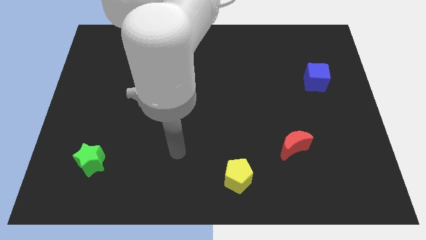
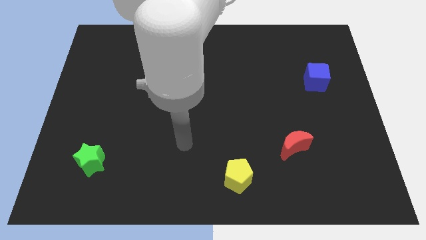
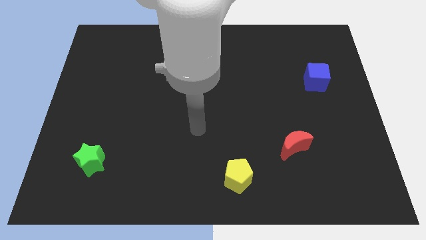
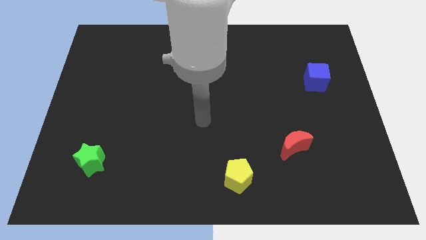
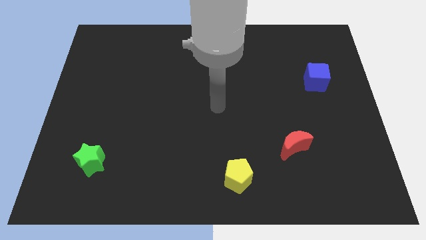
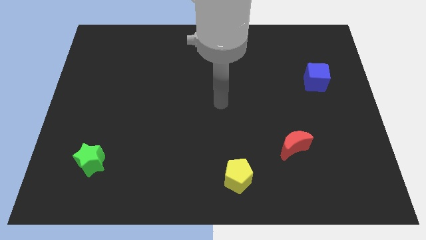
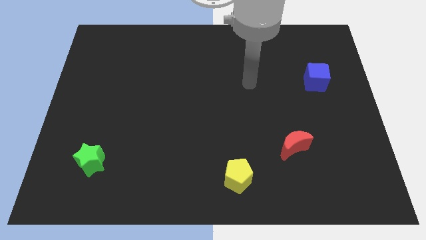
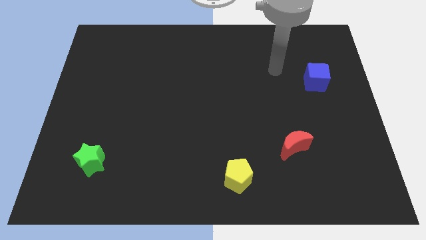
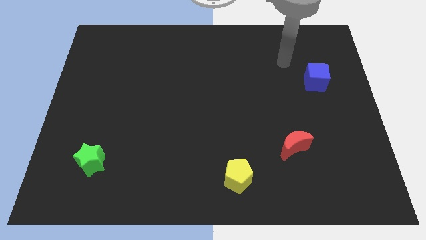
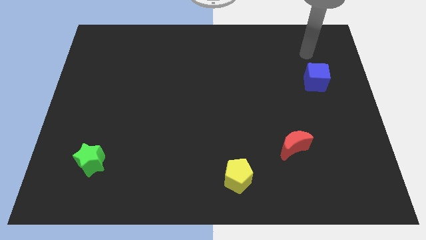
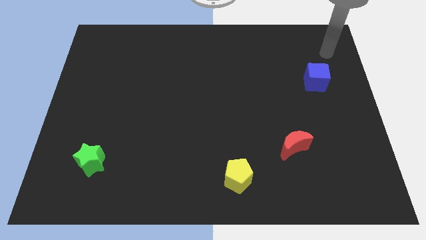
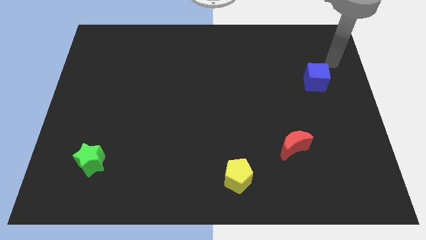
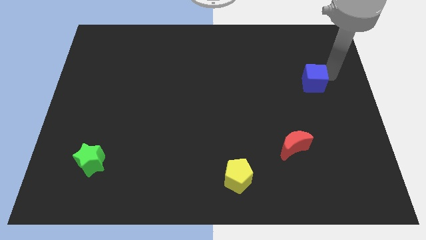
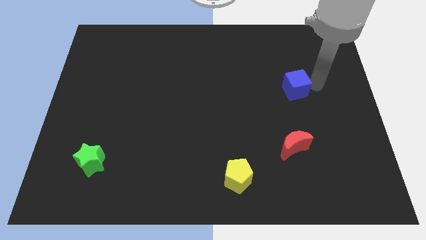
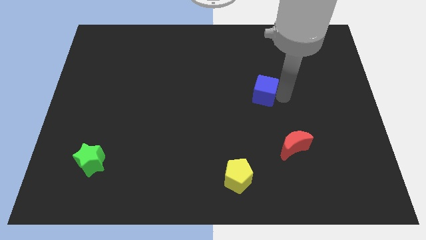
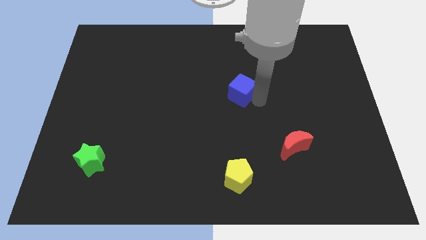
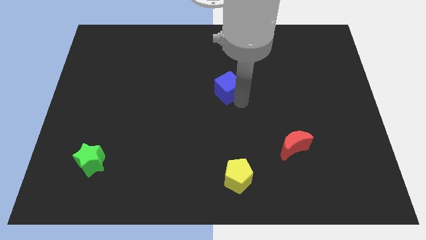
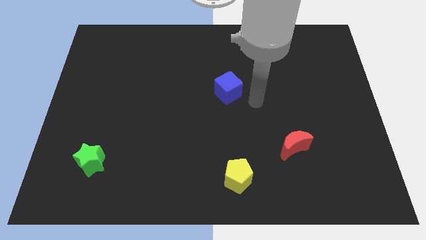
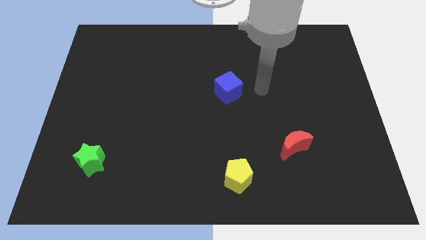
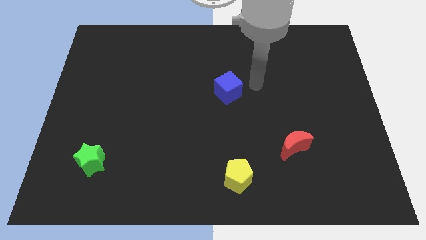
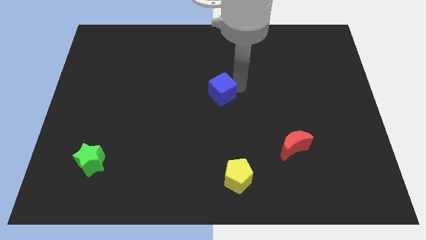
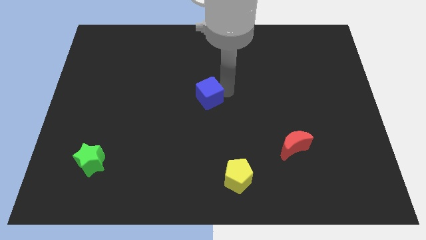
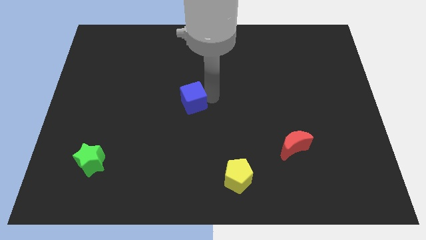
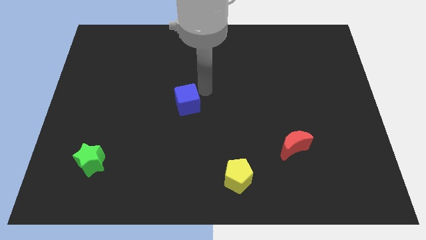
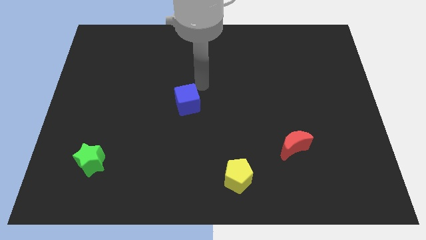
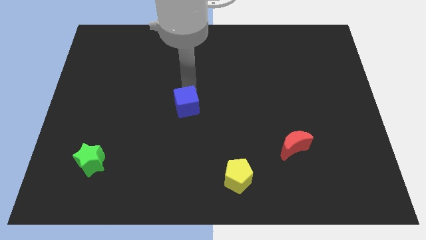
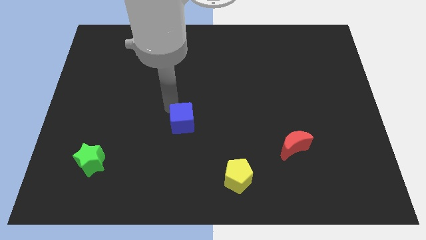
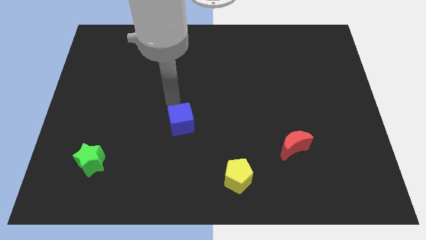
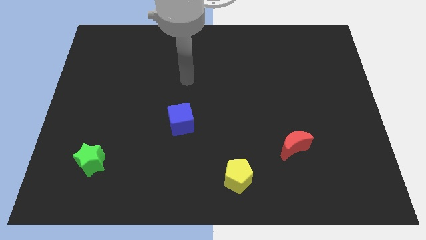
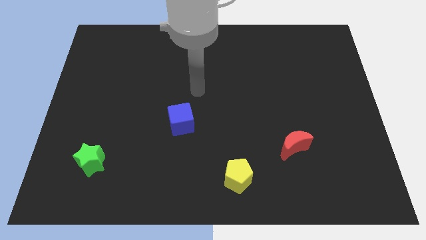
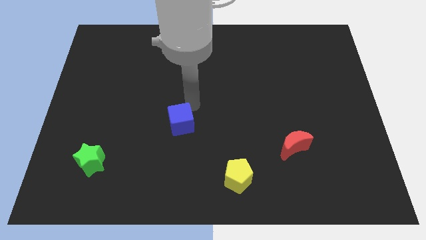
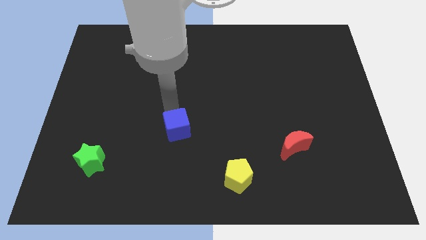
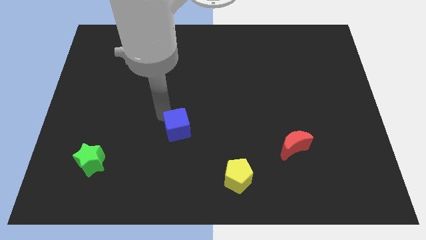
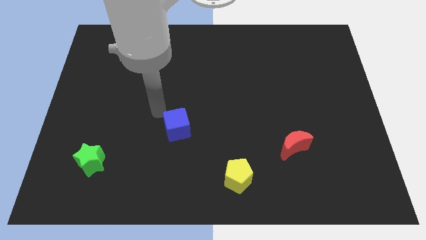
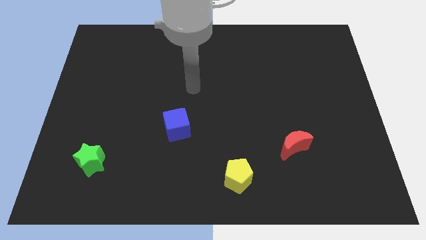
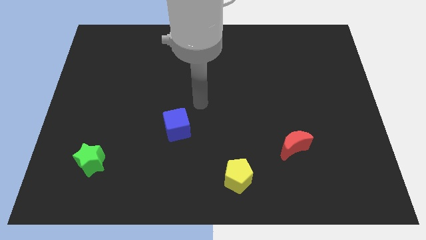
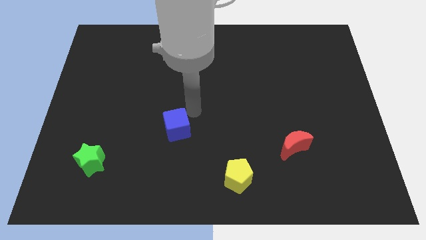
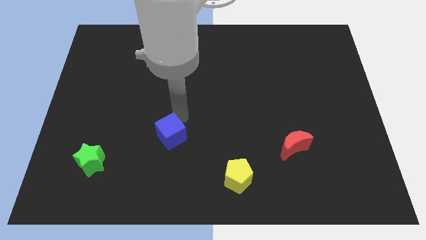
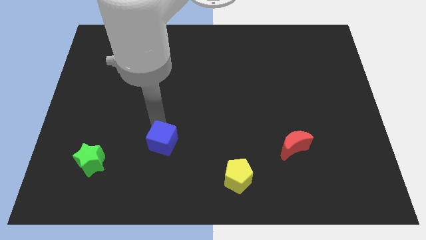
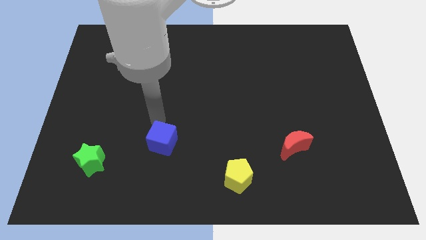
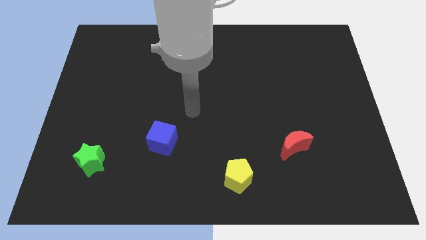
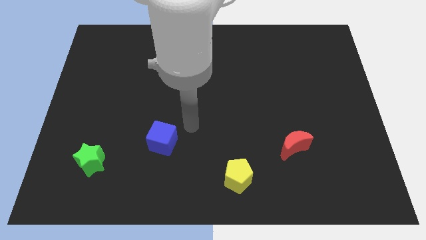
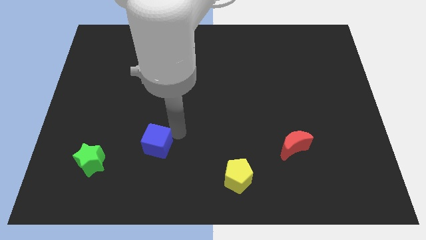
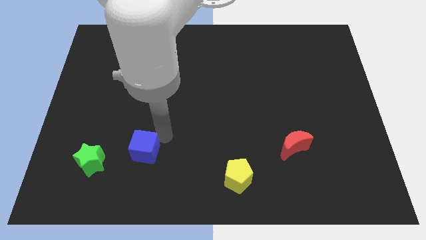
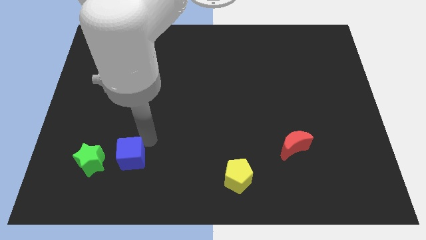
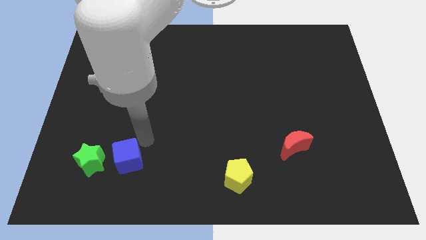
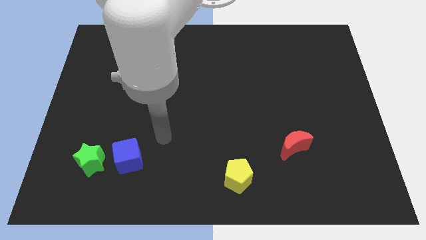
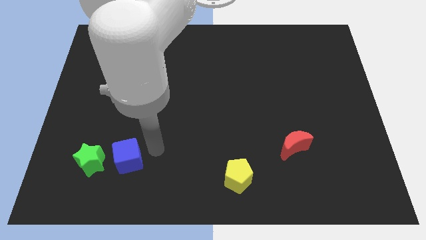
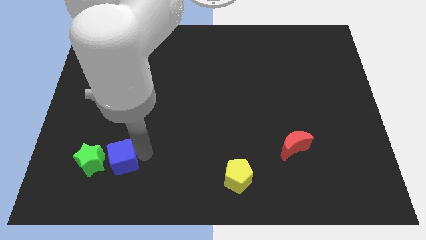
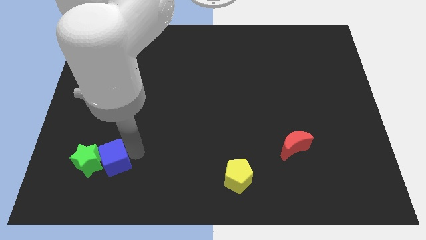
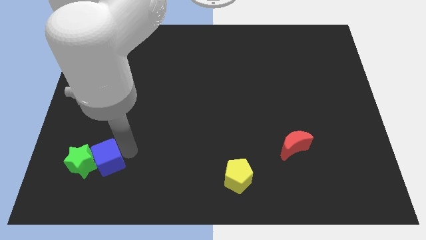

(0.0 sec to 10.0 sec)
put the cube towards the green block

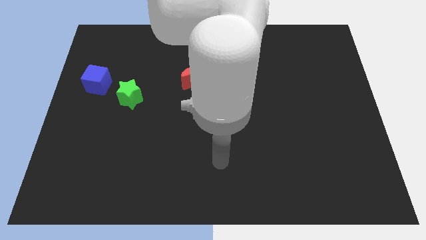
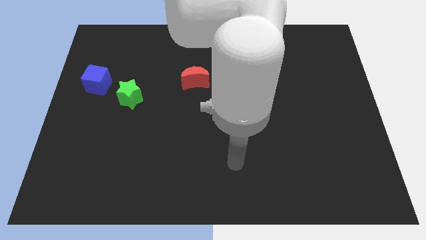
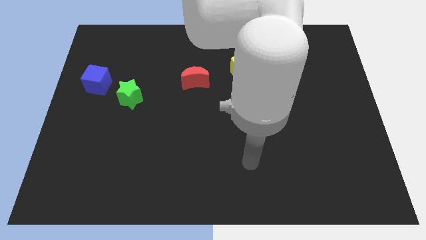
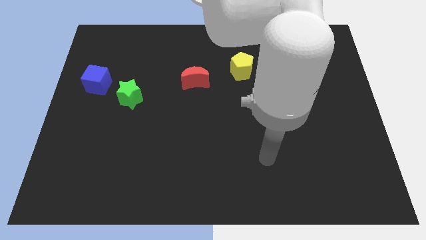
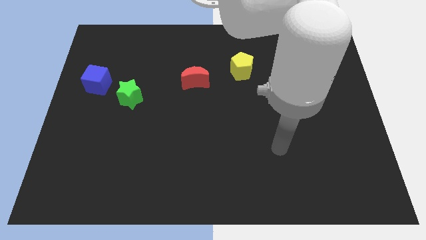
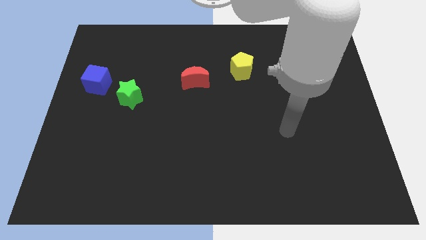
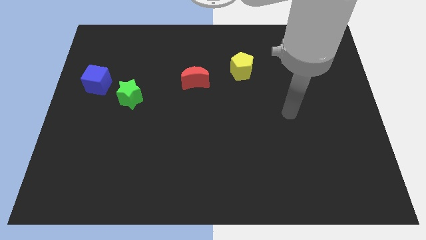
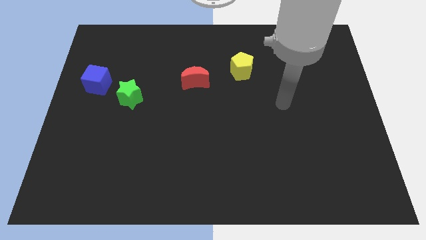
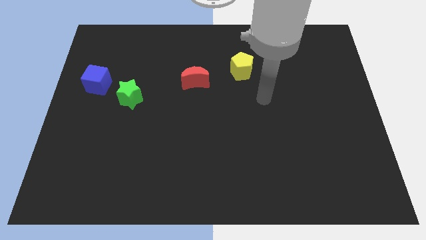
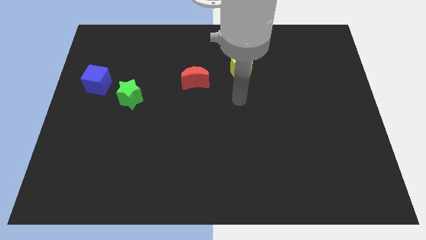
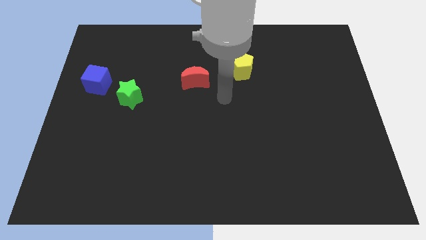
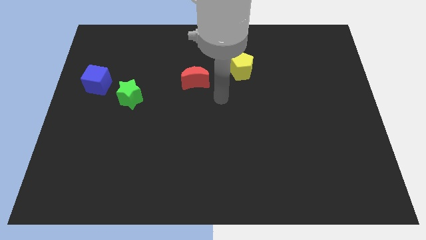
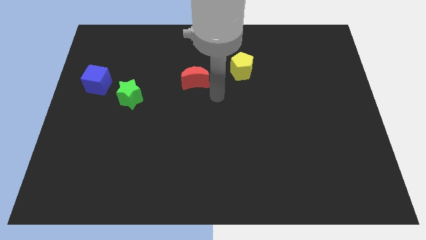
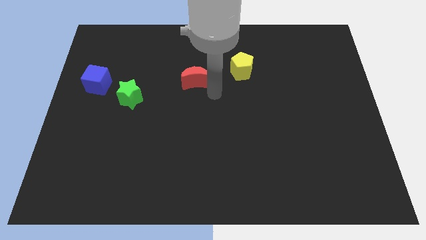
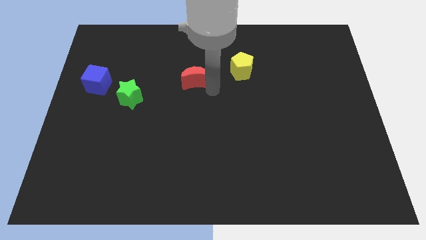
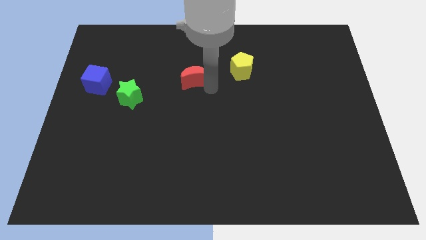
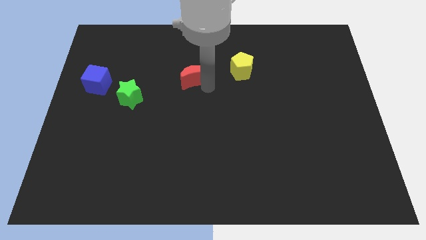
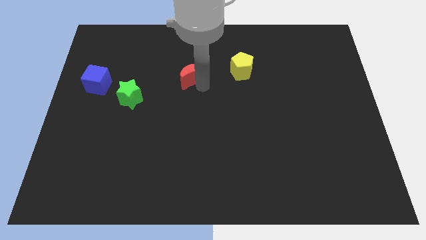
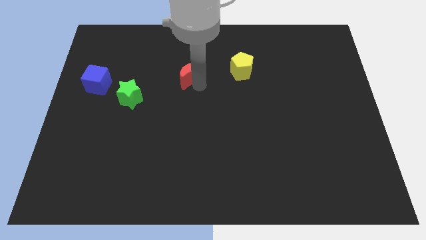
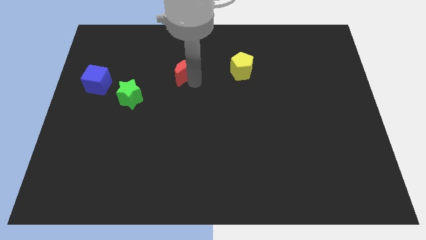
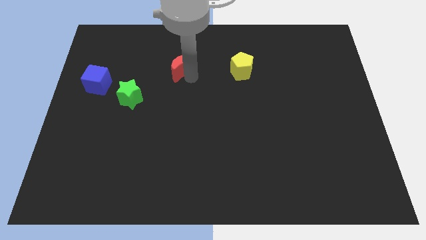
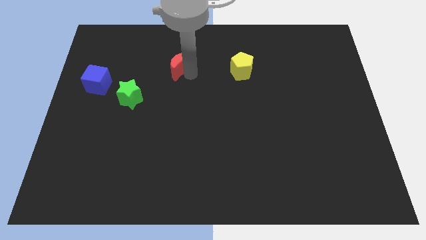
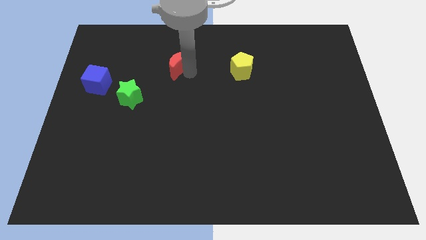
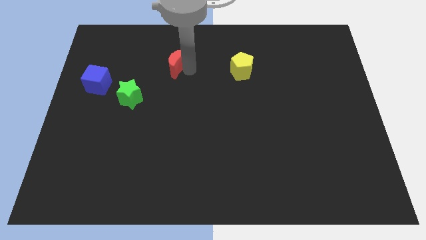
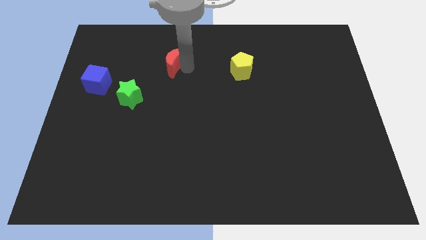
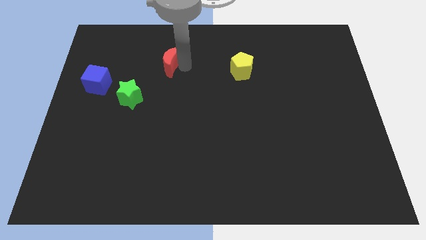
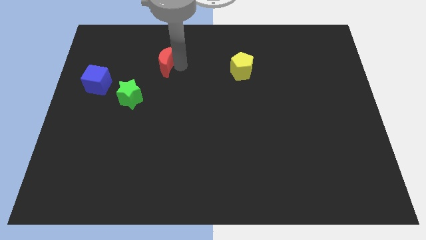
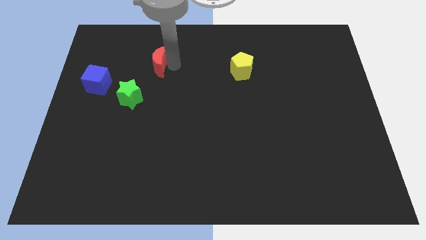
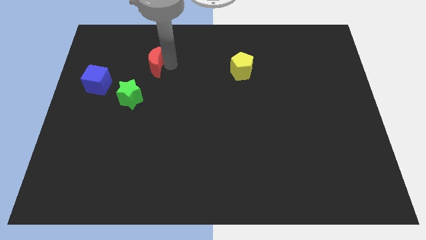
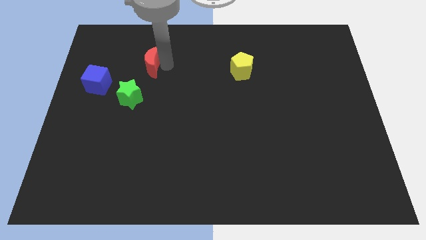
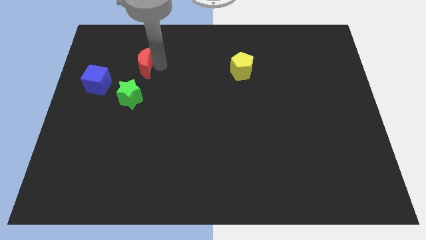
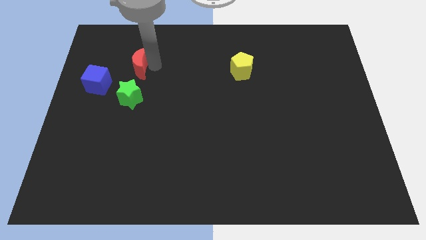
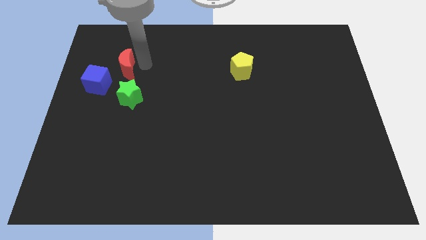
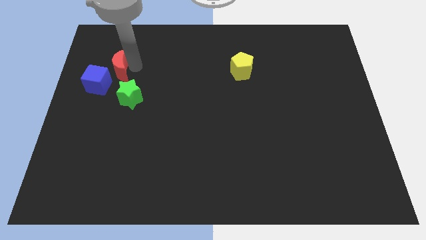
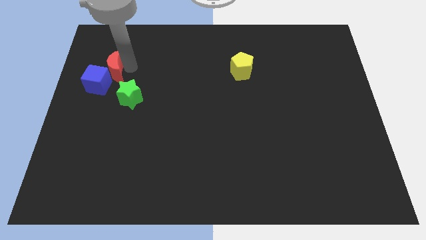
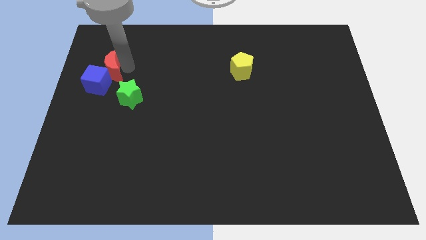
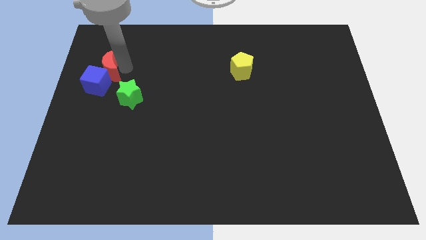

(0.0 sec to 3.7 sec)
move the red moon next to the cube
